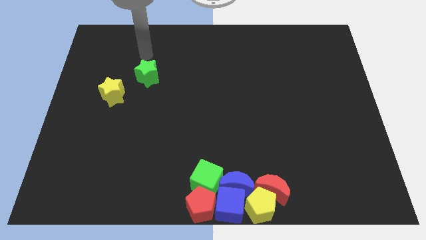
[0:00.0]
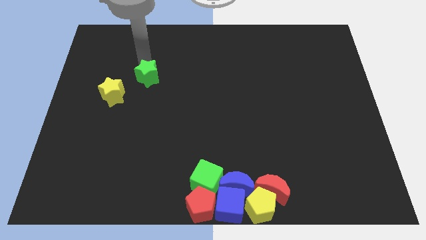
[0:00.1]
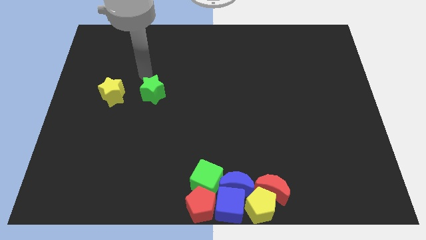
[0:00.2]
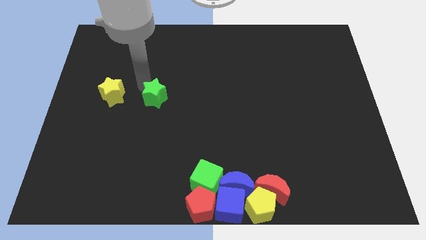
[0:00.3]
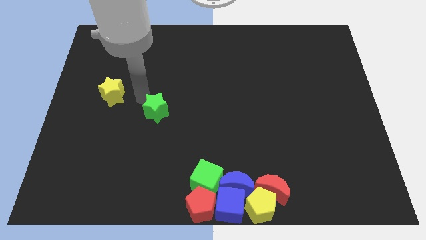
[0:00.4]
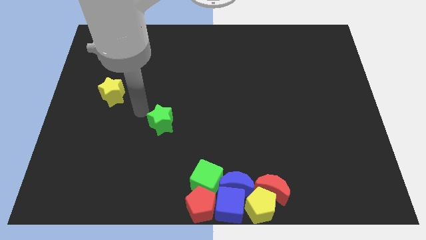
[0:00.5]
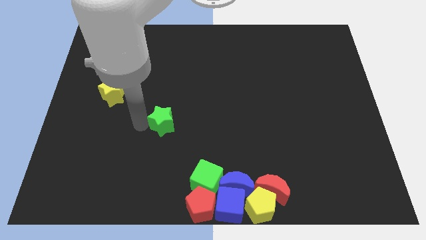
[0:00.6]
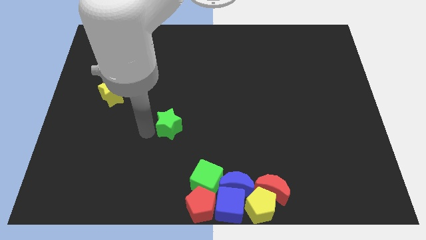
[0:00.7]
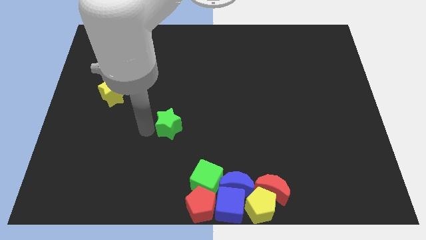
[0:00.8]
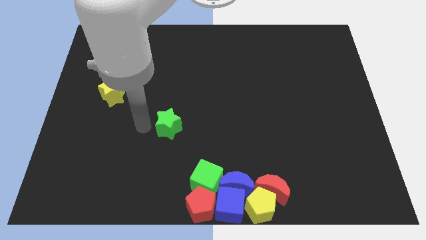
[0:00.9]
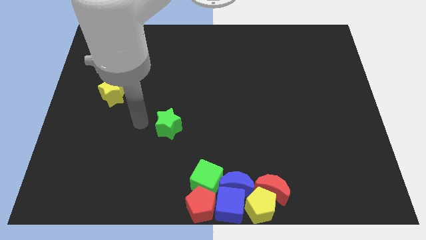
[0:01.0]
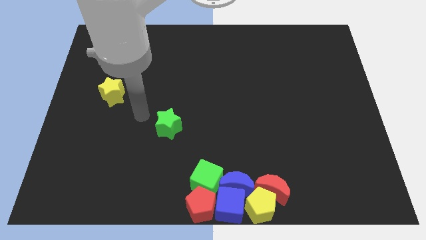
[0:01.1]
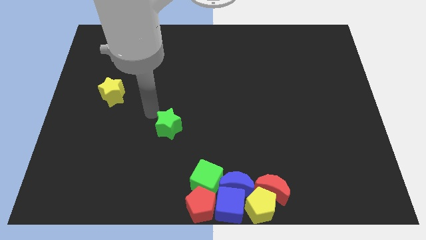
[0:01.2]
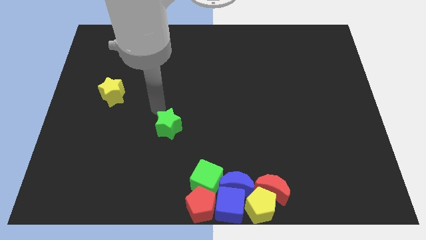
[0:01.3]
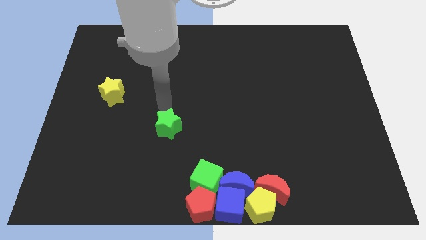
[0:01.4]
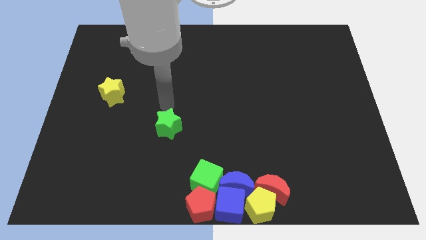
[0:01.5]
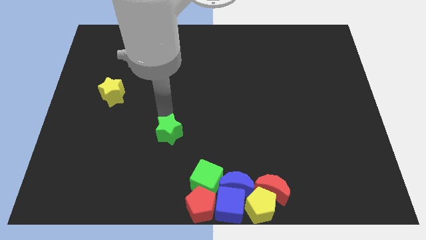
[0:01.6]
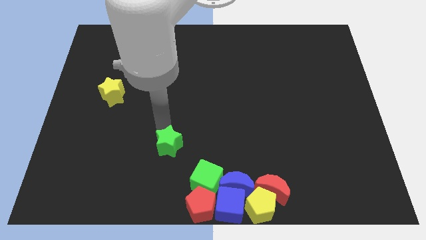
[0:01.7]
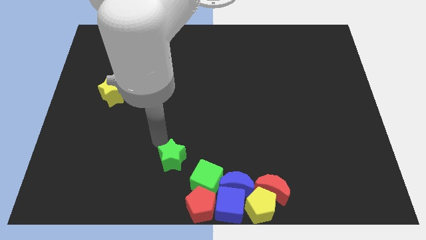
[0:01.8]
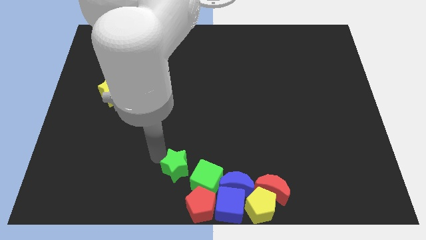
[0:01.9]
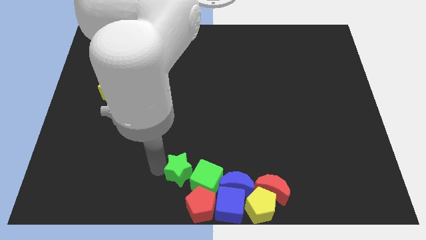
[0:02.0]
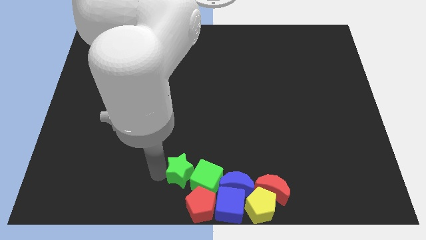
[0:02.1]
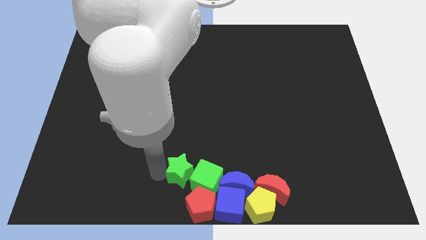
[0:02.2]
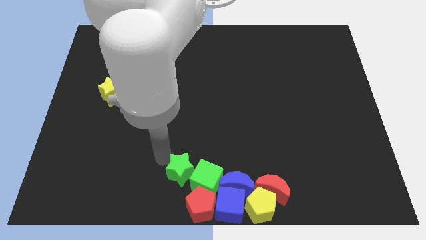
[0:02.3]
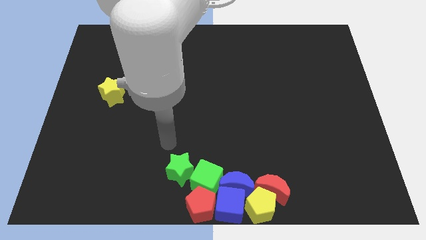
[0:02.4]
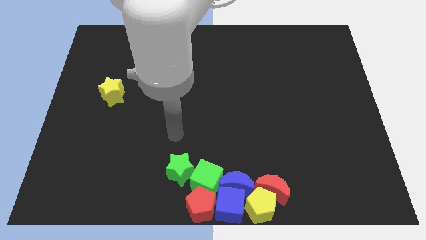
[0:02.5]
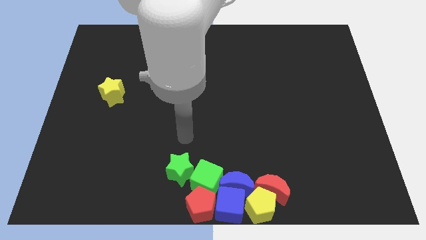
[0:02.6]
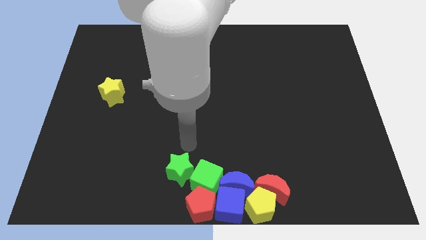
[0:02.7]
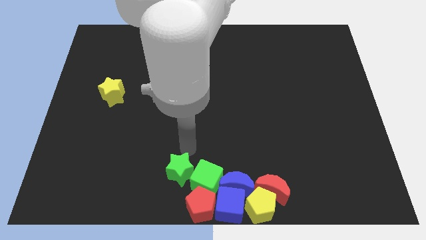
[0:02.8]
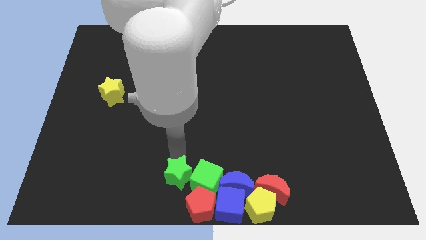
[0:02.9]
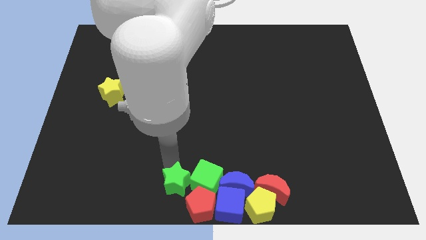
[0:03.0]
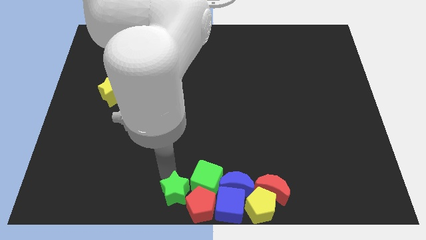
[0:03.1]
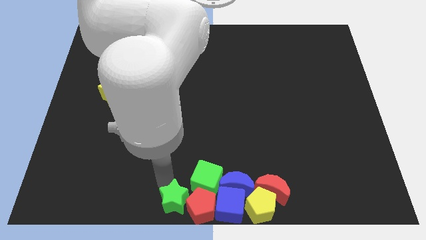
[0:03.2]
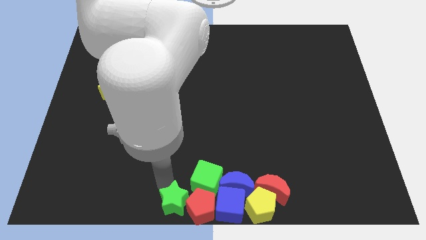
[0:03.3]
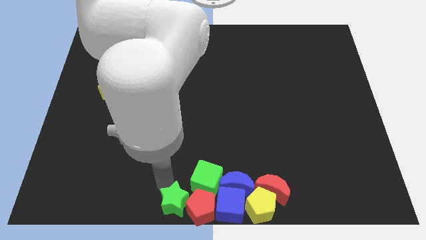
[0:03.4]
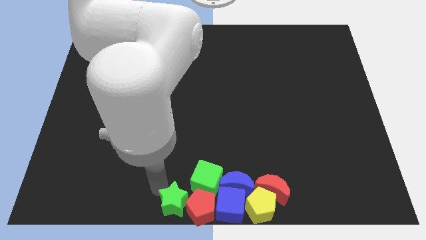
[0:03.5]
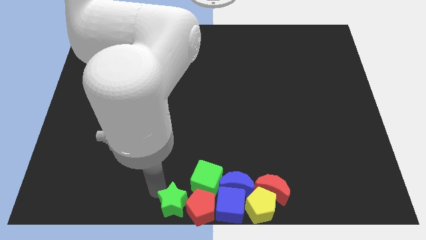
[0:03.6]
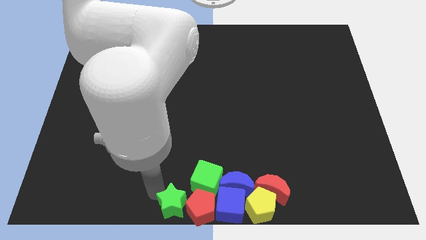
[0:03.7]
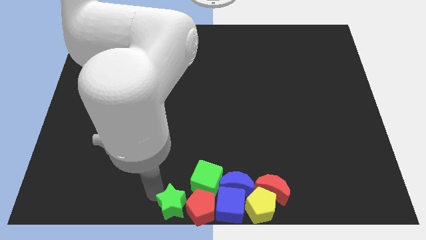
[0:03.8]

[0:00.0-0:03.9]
place the green star at the bottom center of the board

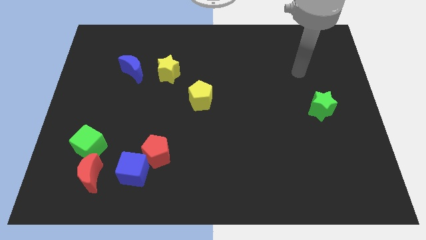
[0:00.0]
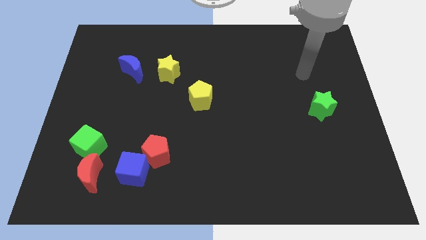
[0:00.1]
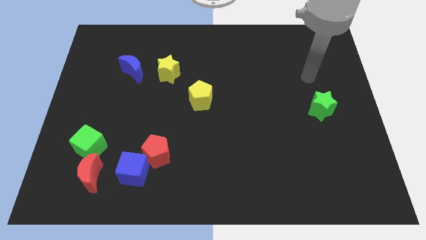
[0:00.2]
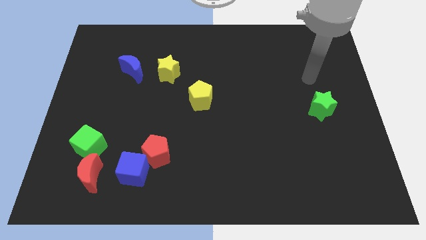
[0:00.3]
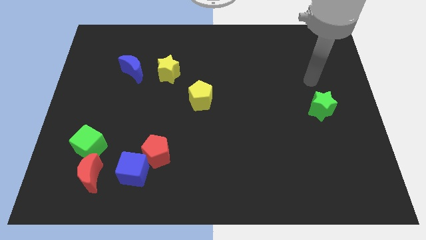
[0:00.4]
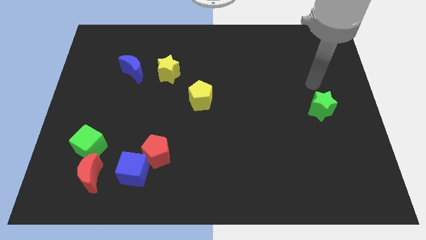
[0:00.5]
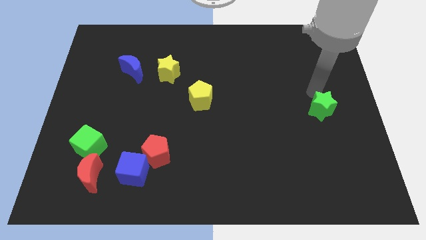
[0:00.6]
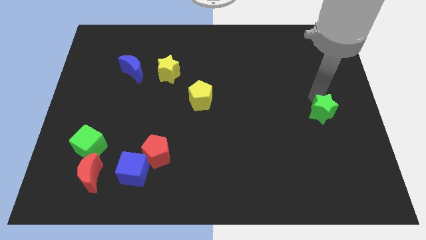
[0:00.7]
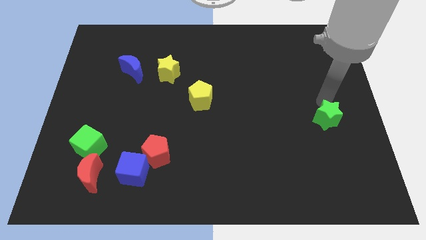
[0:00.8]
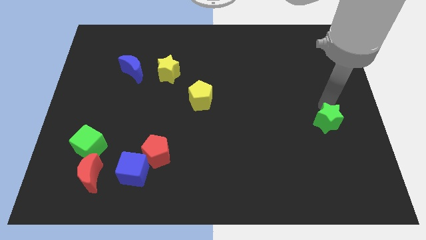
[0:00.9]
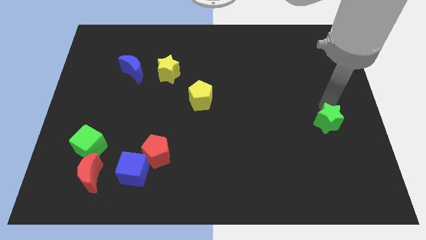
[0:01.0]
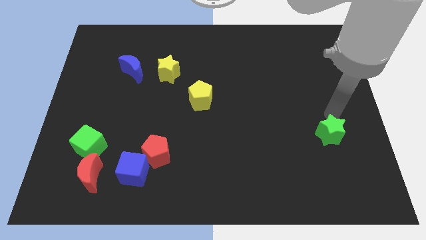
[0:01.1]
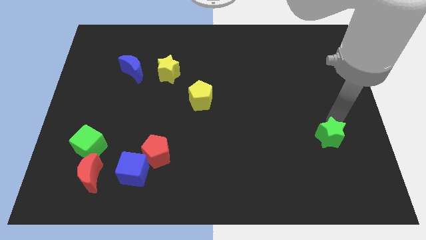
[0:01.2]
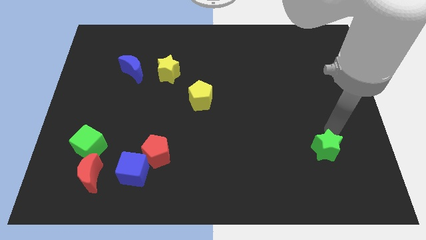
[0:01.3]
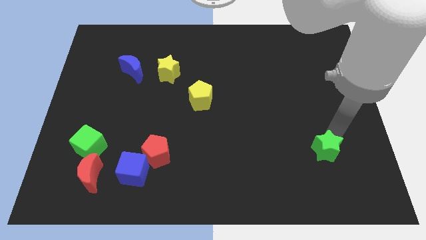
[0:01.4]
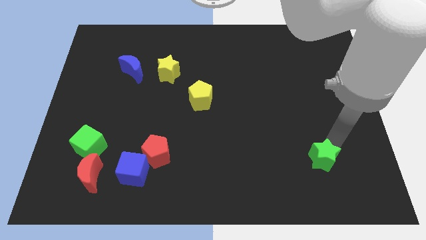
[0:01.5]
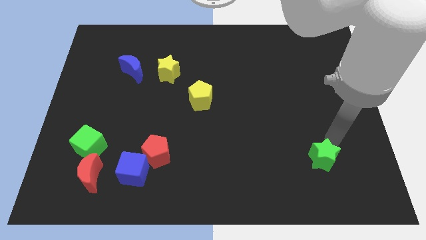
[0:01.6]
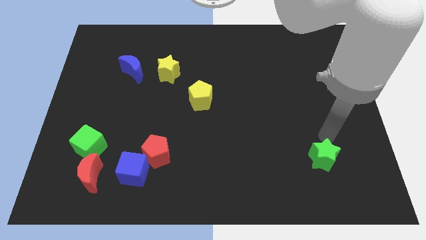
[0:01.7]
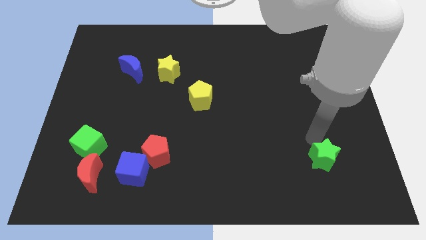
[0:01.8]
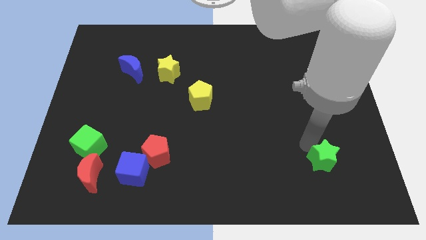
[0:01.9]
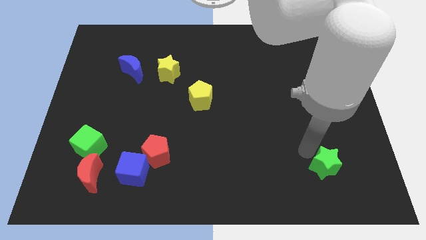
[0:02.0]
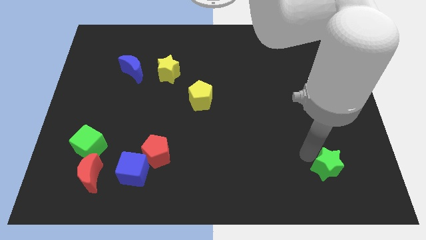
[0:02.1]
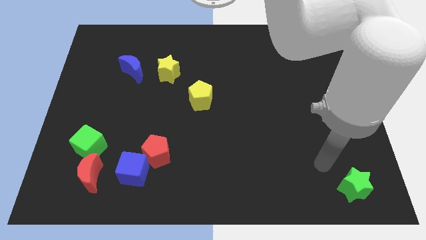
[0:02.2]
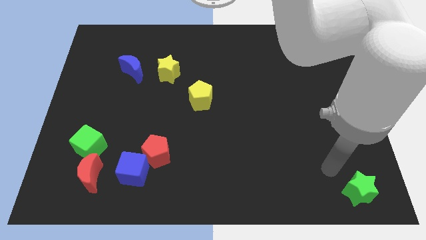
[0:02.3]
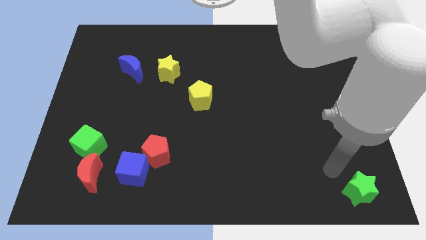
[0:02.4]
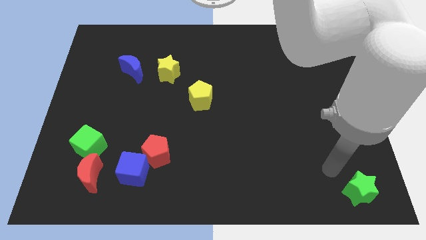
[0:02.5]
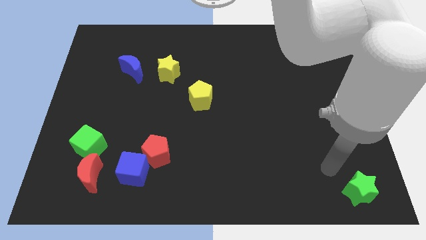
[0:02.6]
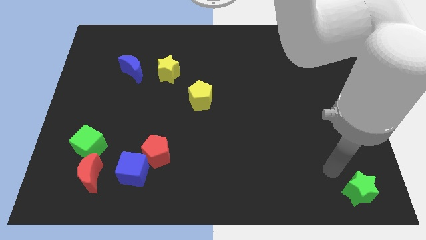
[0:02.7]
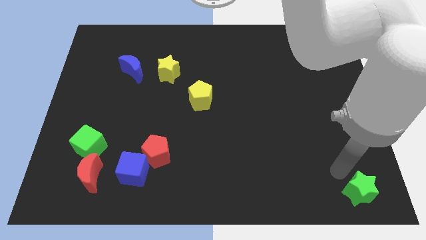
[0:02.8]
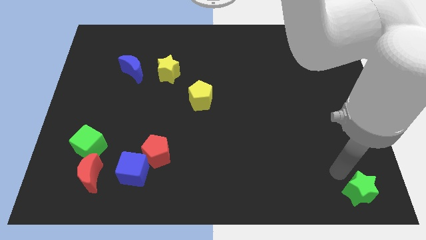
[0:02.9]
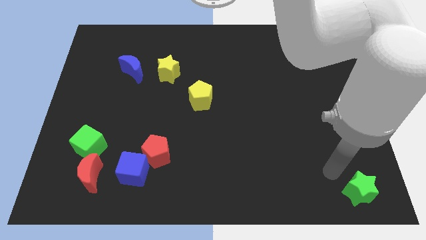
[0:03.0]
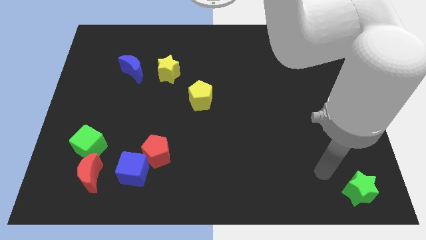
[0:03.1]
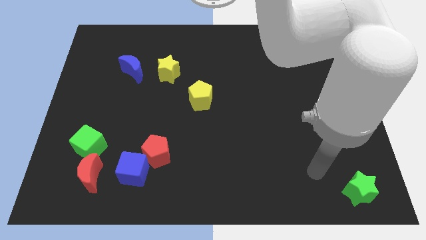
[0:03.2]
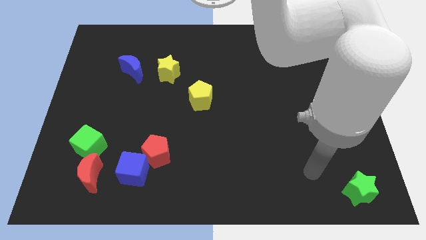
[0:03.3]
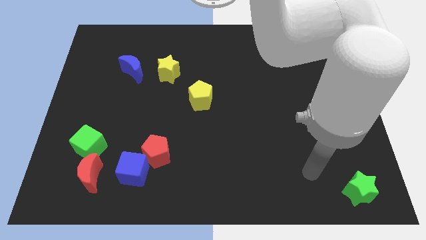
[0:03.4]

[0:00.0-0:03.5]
move the green star to the bottom right of the board

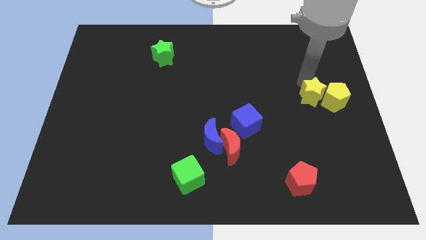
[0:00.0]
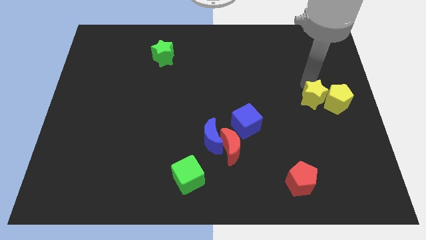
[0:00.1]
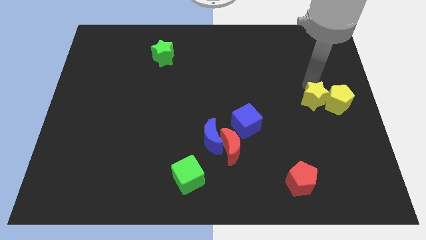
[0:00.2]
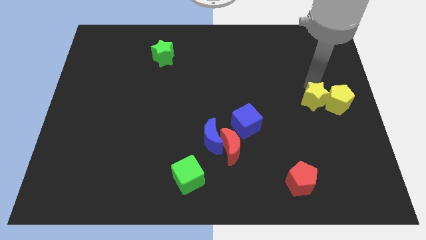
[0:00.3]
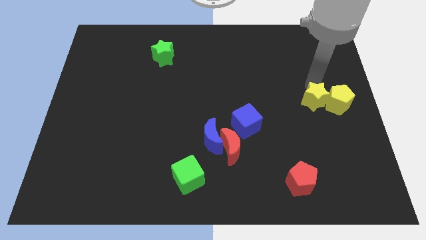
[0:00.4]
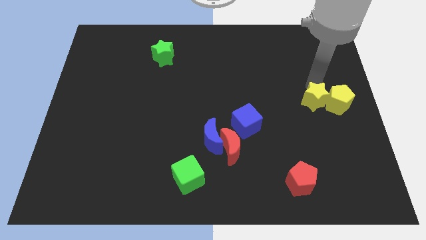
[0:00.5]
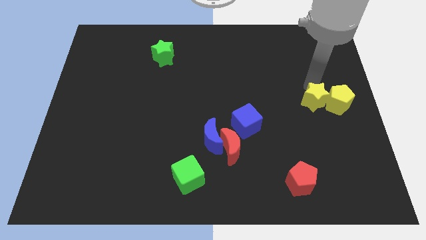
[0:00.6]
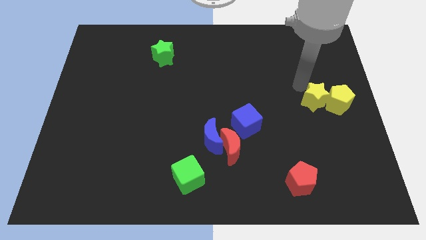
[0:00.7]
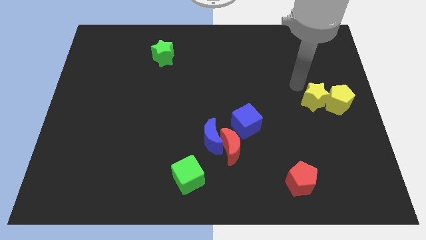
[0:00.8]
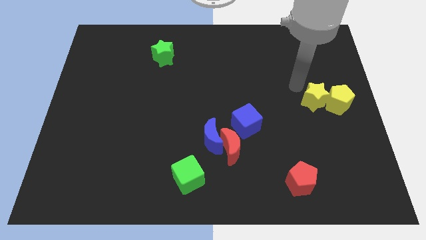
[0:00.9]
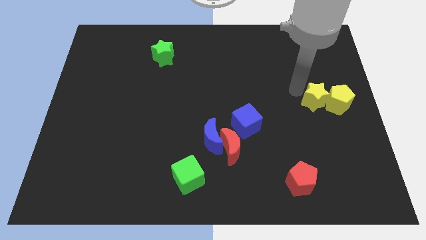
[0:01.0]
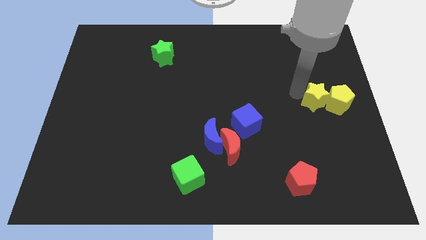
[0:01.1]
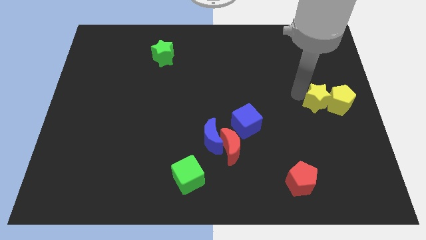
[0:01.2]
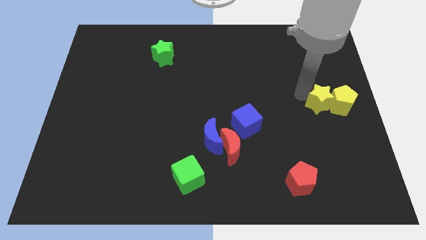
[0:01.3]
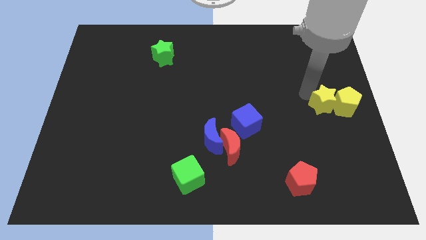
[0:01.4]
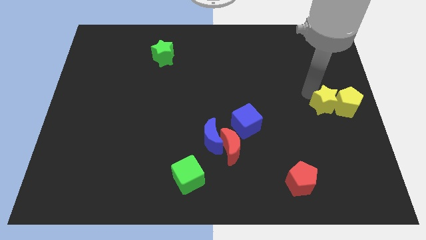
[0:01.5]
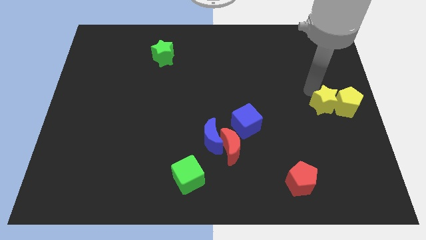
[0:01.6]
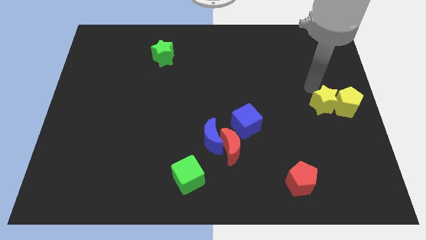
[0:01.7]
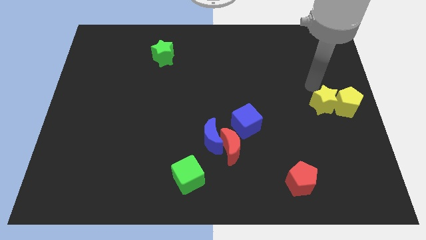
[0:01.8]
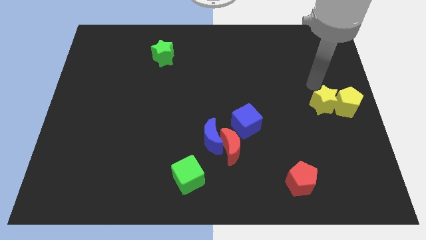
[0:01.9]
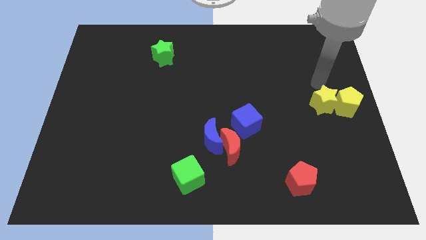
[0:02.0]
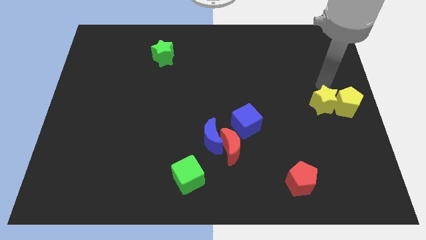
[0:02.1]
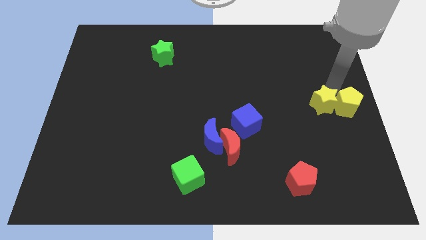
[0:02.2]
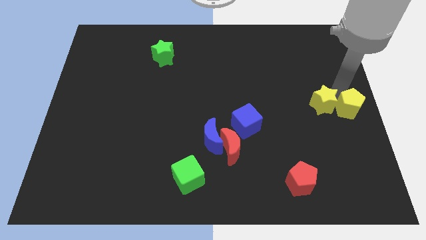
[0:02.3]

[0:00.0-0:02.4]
move yellow star and yellow pentagon to the right center of the board
